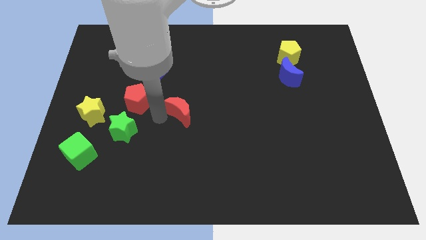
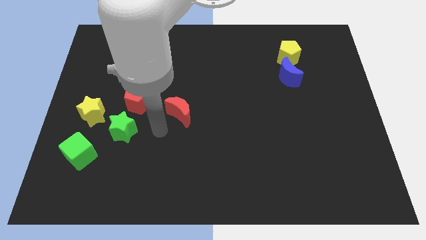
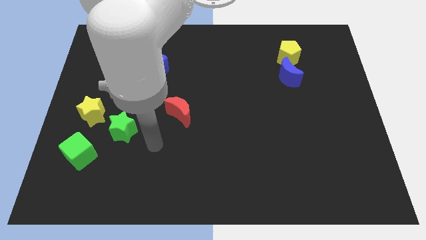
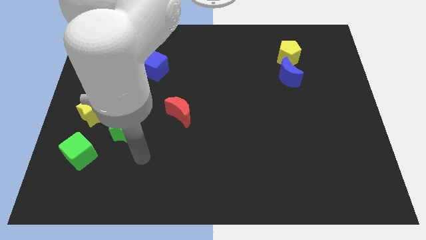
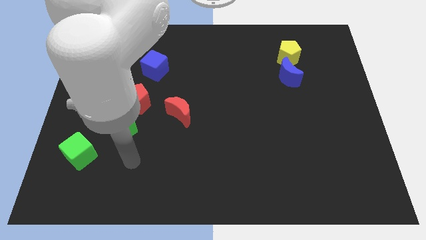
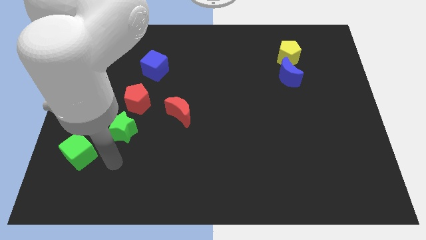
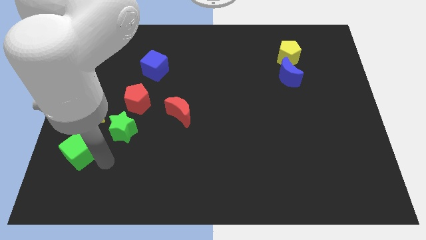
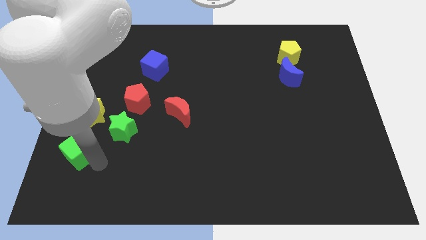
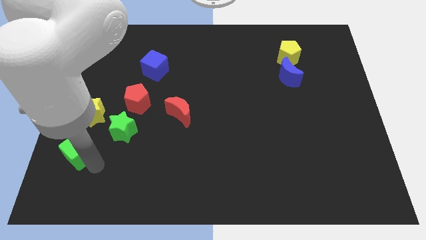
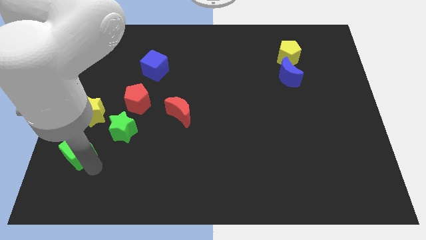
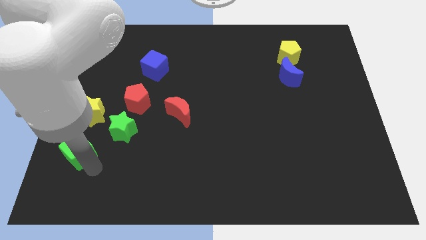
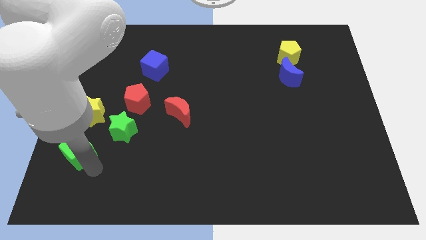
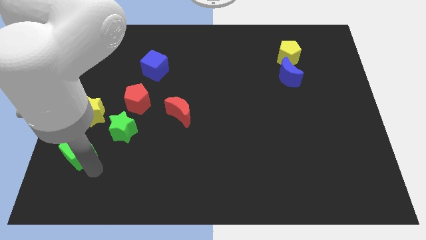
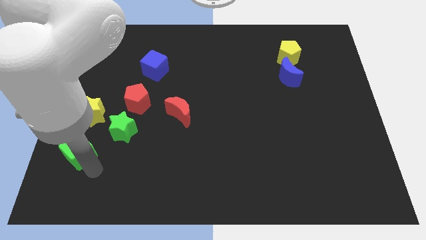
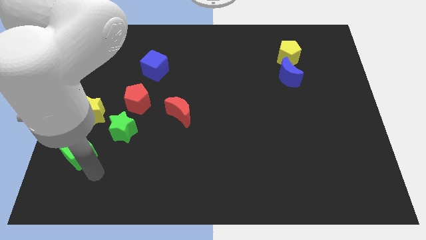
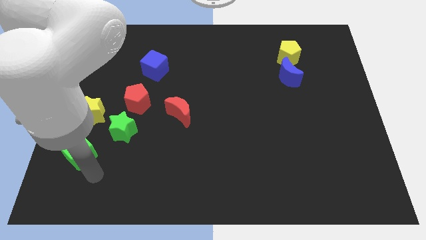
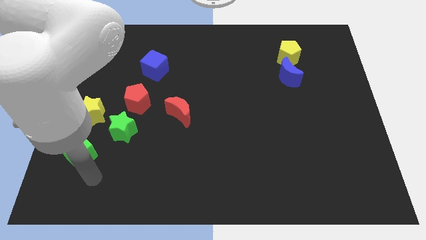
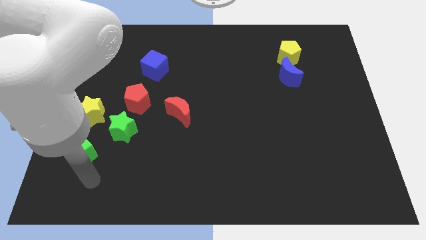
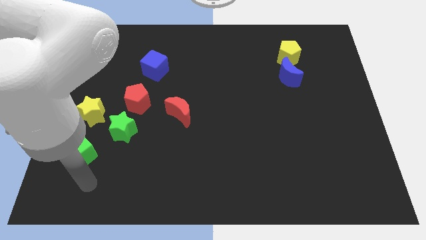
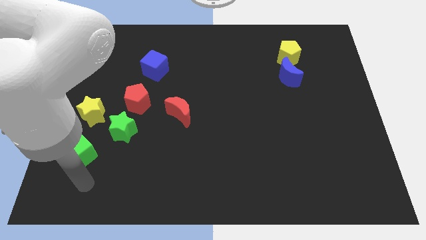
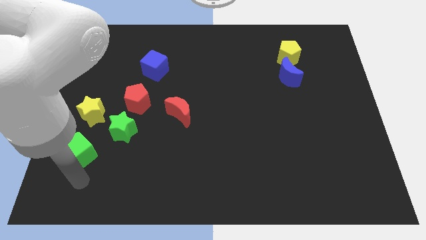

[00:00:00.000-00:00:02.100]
move your arm away from the red pentagon

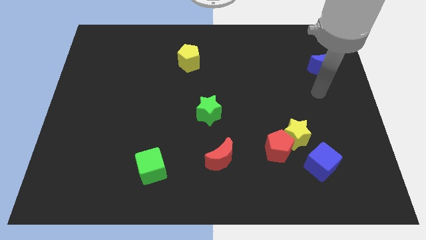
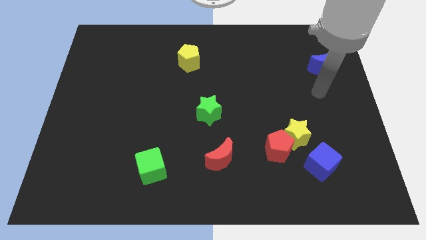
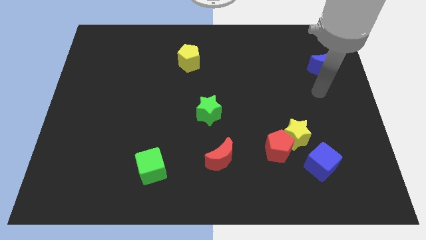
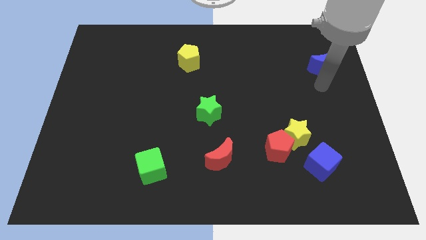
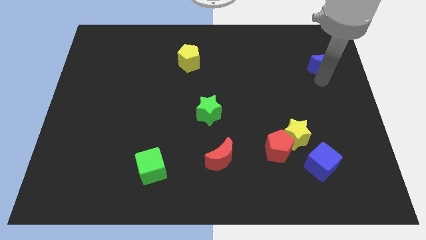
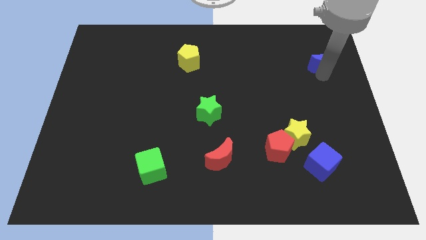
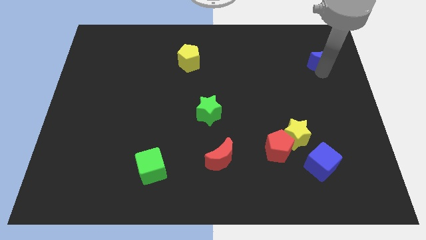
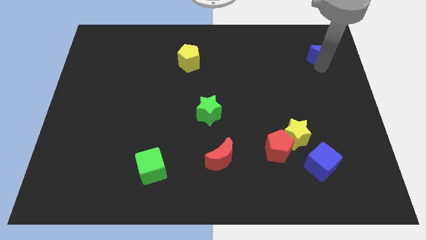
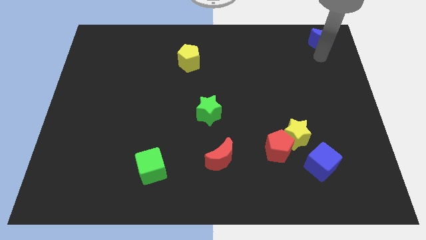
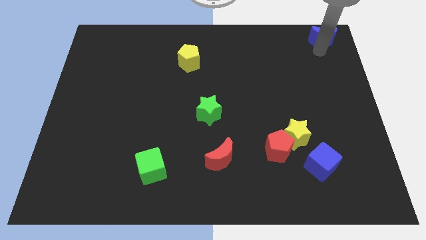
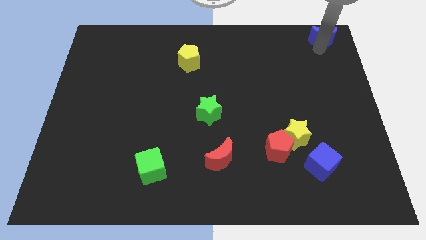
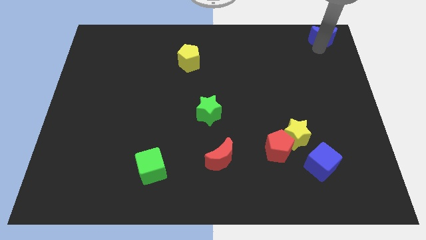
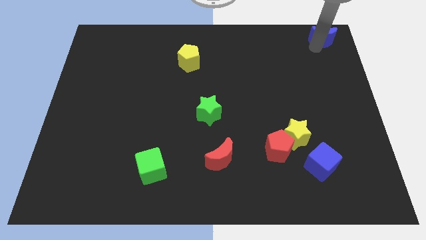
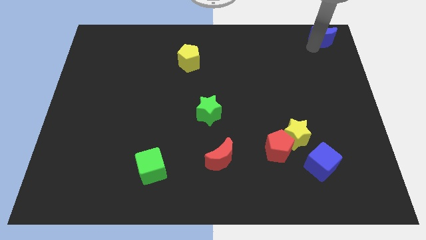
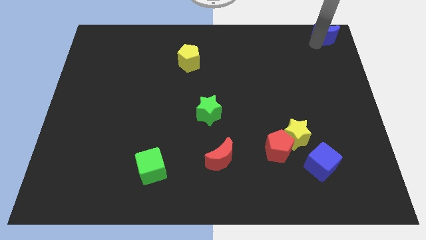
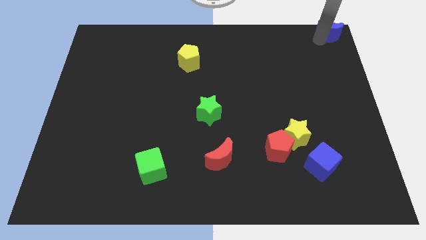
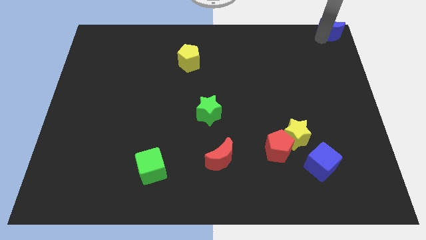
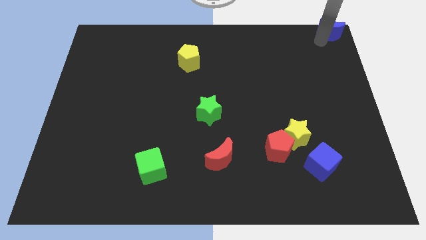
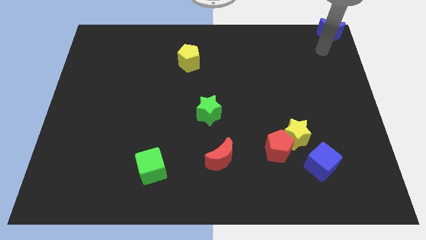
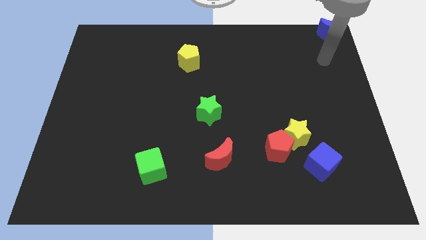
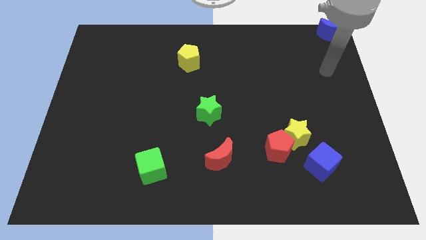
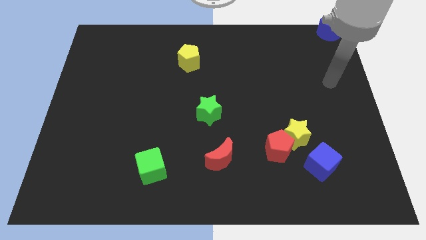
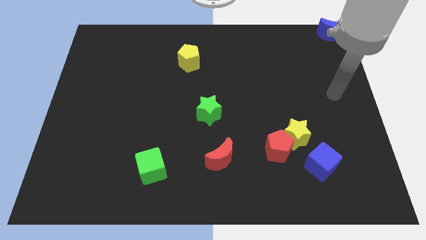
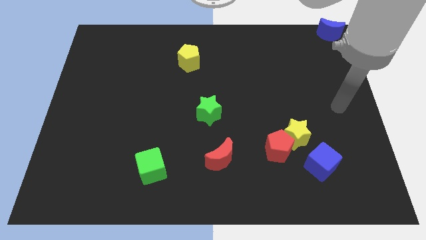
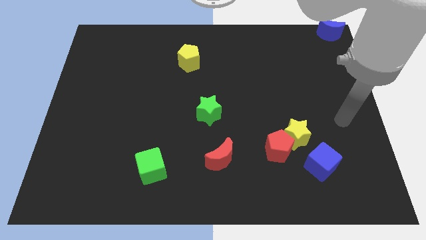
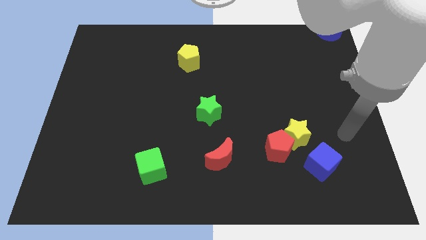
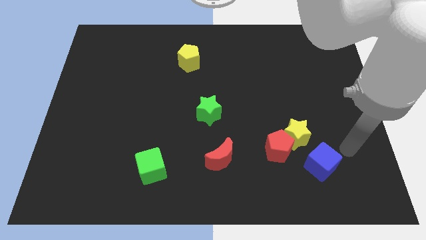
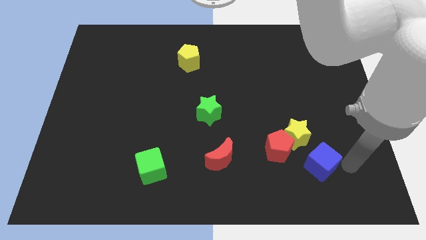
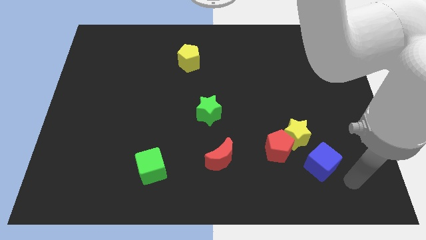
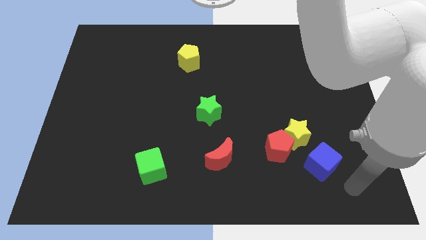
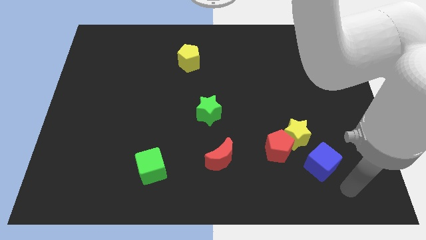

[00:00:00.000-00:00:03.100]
put the blue crescent at the top right corner

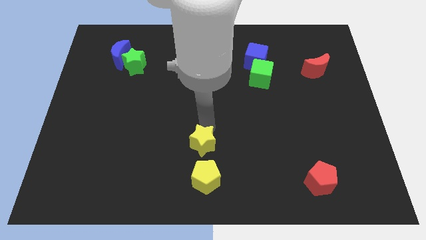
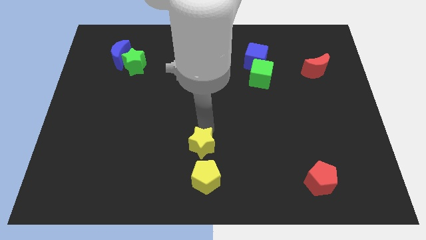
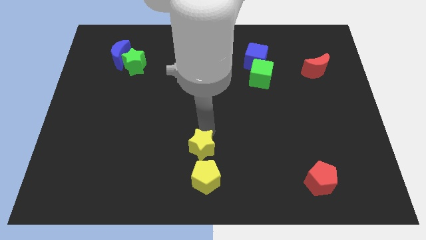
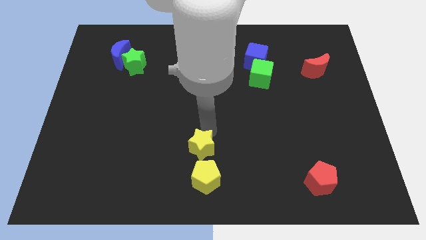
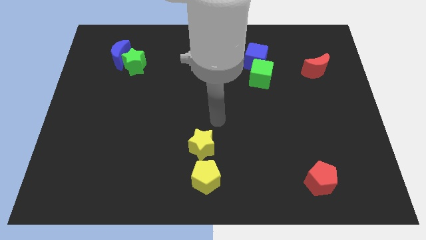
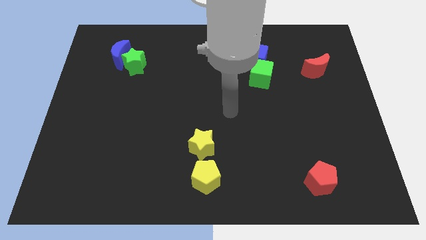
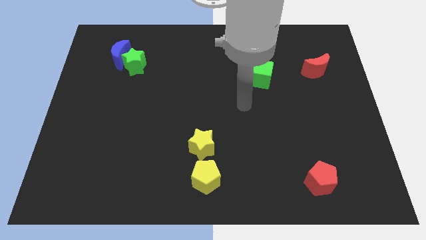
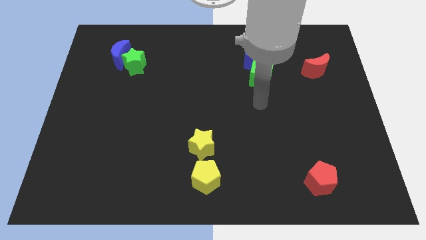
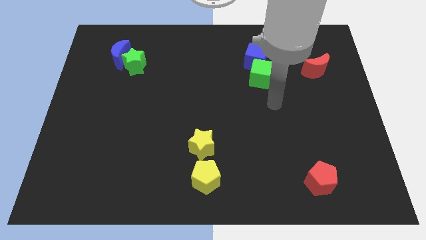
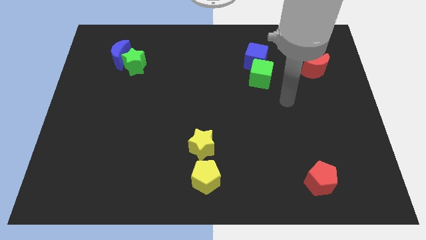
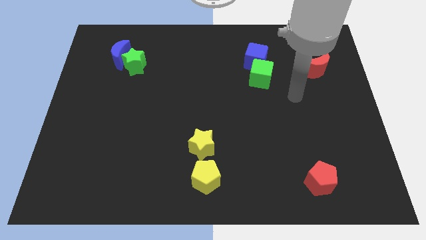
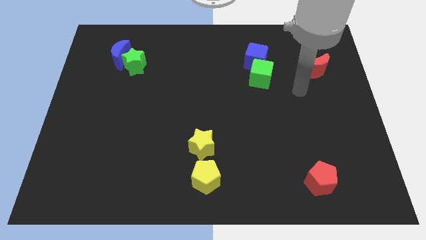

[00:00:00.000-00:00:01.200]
move the arm below the red moon

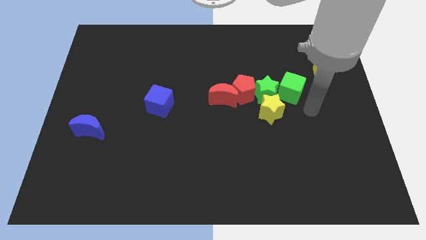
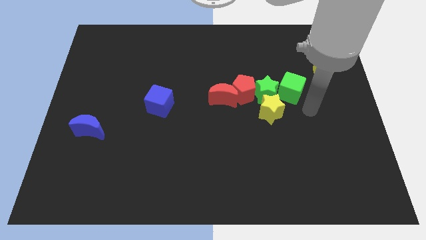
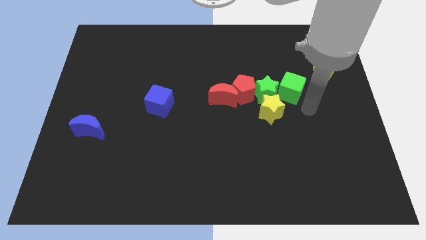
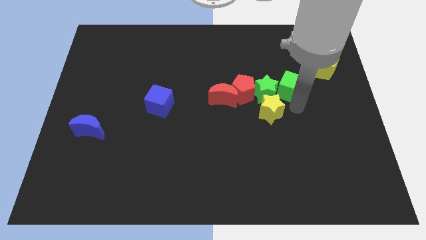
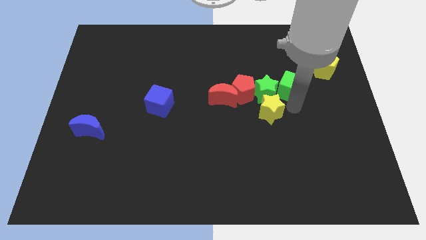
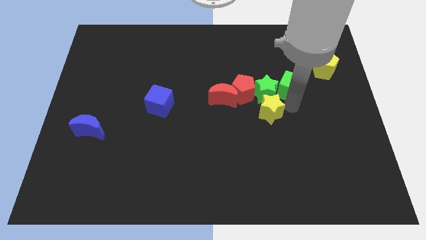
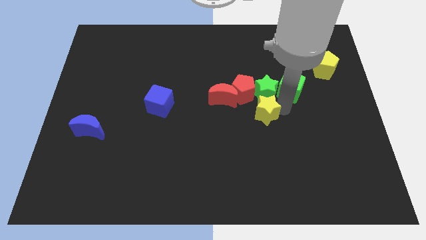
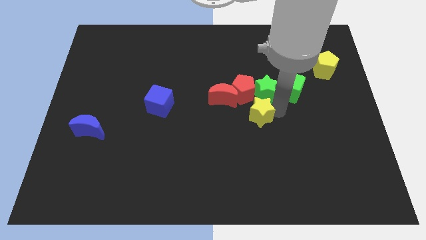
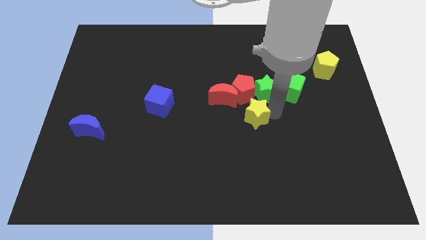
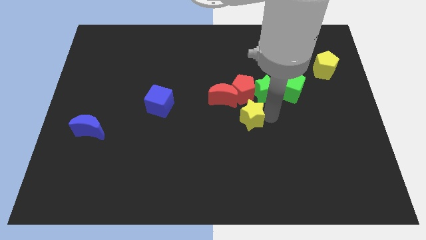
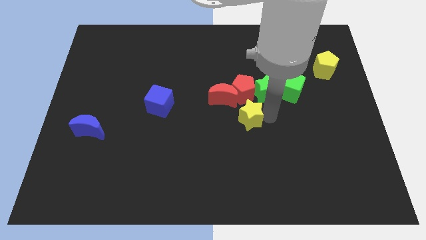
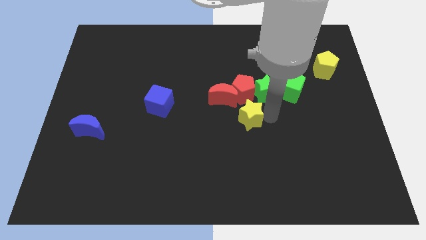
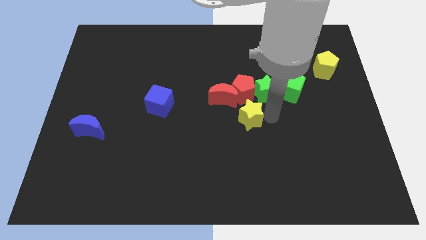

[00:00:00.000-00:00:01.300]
separate the yellow star from the green star

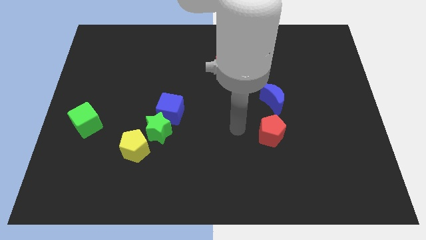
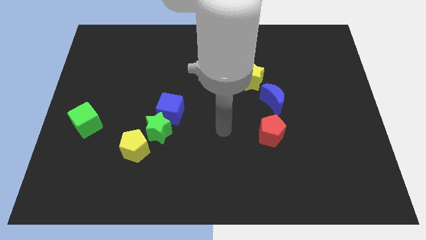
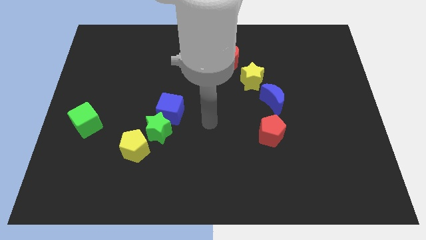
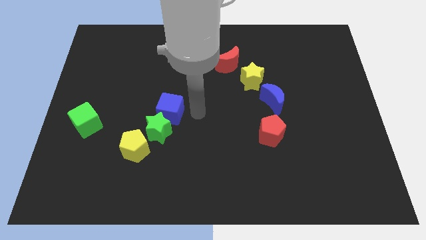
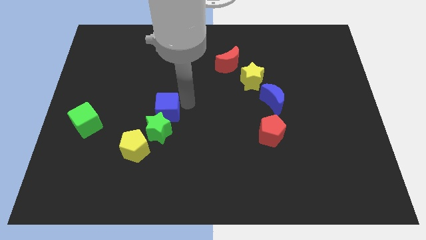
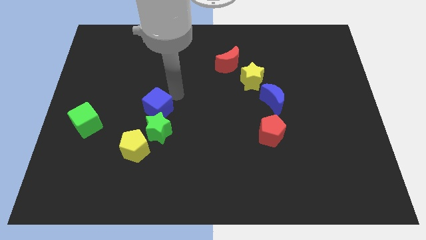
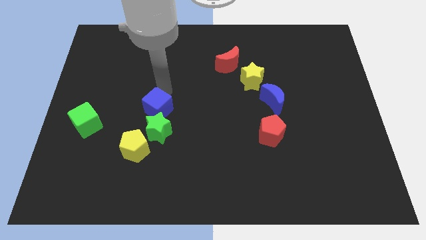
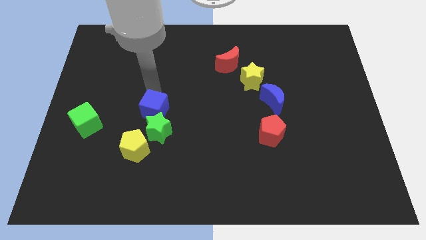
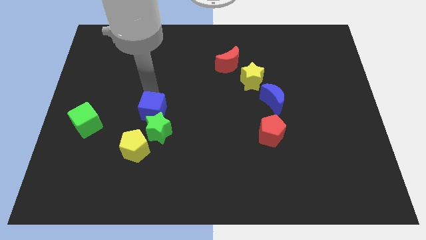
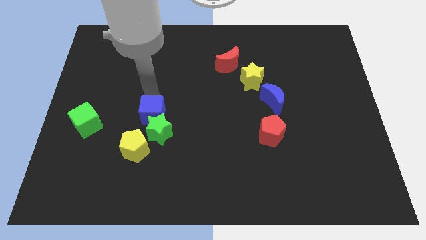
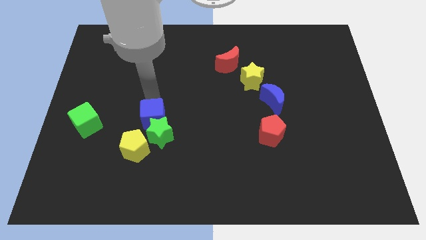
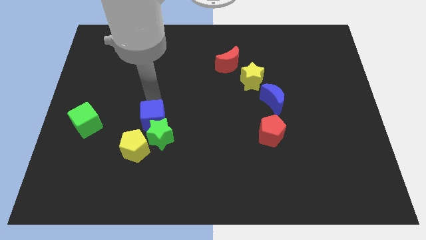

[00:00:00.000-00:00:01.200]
push the blue cube into green star
